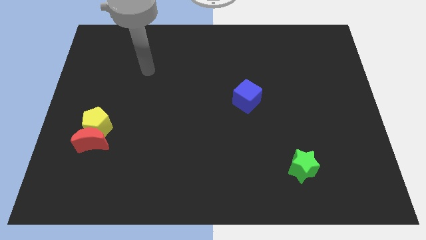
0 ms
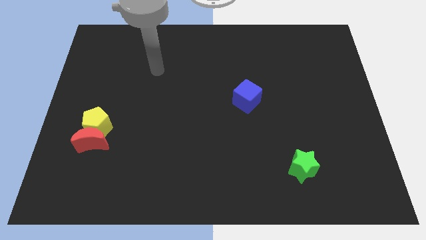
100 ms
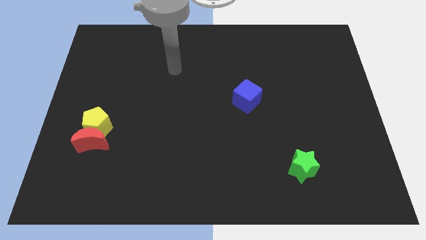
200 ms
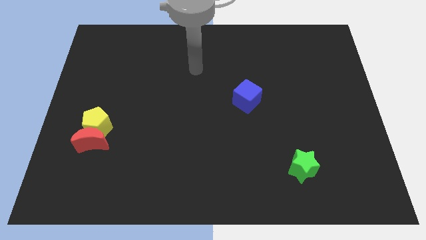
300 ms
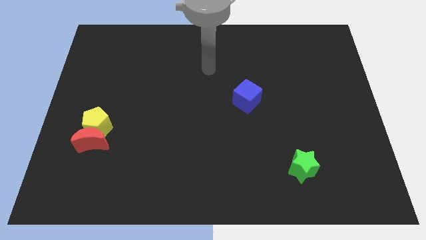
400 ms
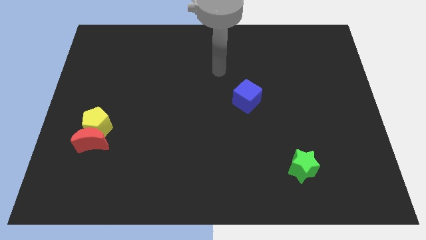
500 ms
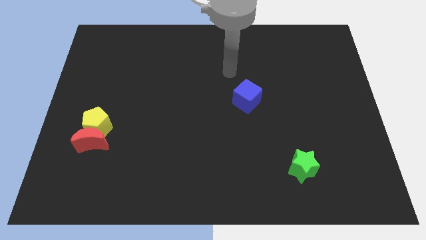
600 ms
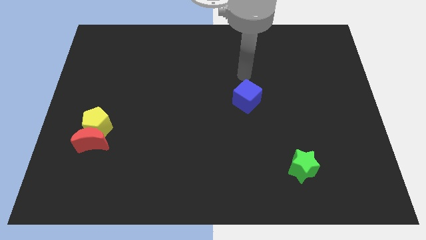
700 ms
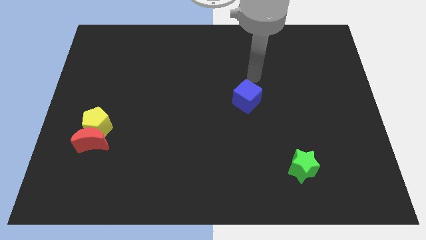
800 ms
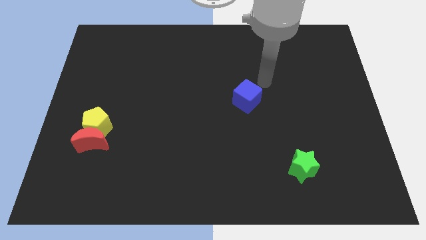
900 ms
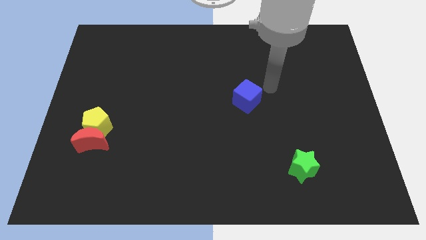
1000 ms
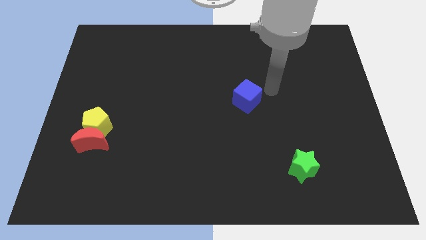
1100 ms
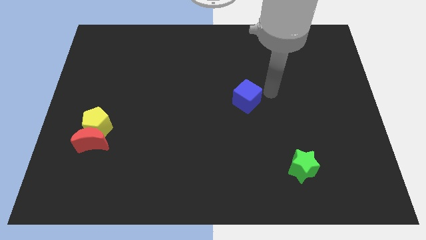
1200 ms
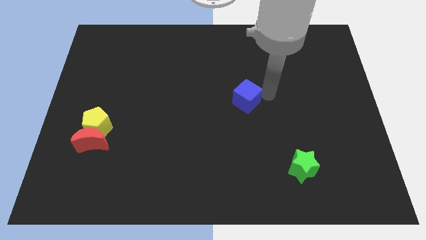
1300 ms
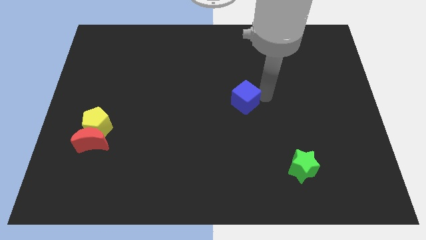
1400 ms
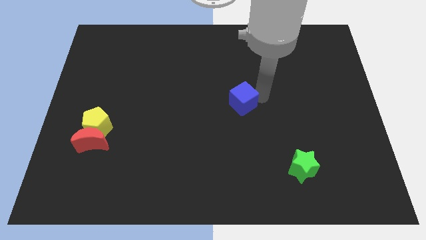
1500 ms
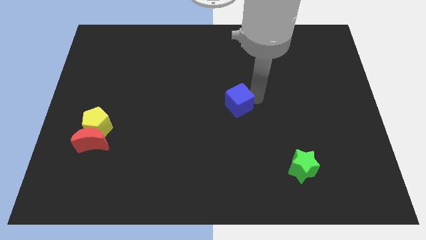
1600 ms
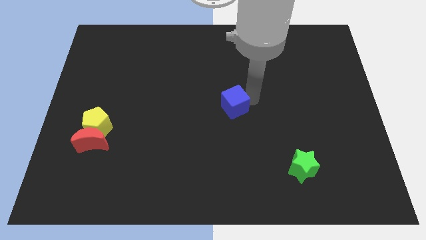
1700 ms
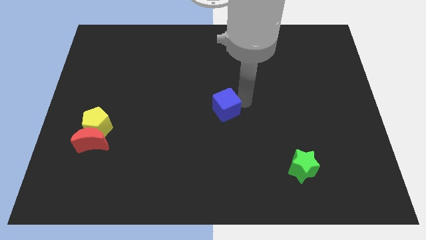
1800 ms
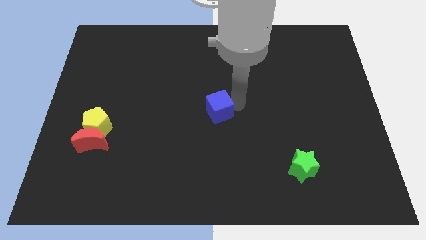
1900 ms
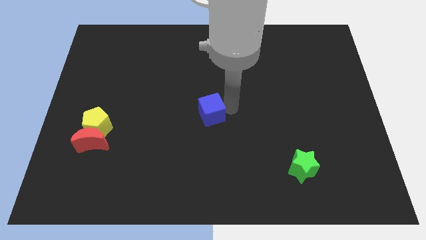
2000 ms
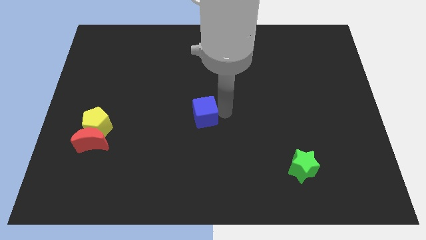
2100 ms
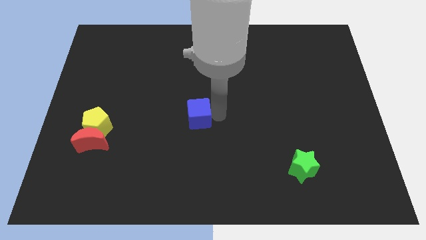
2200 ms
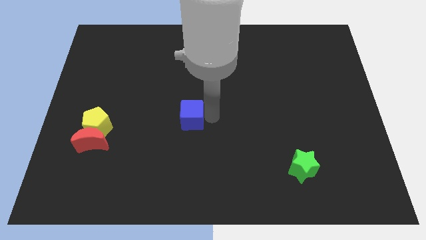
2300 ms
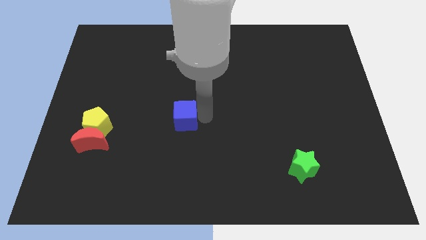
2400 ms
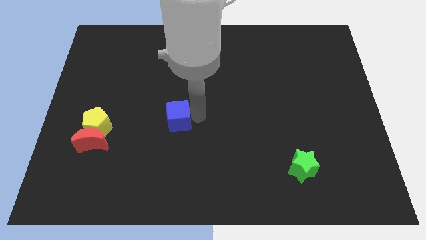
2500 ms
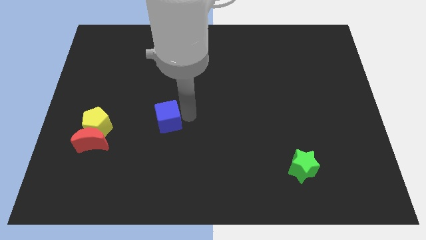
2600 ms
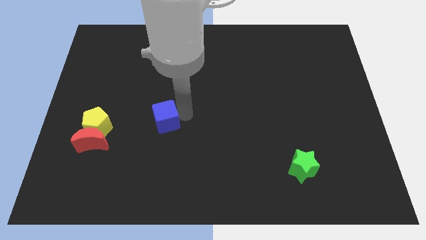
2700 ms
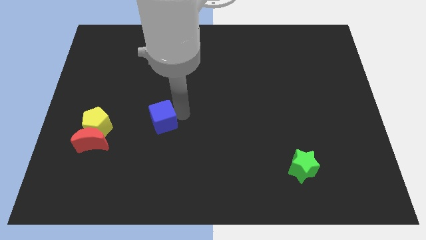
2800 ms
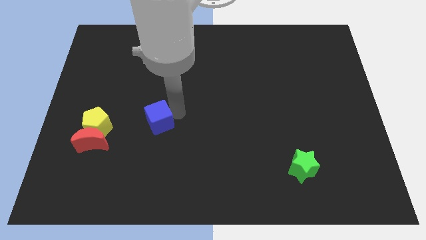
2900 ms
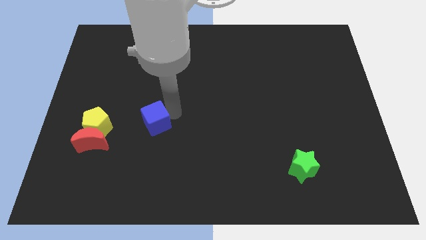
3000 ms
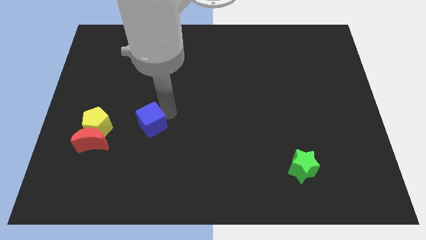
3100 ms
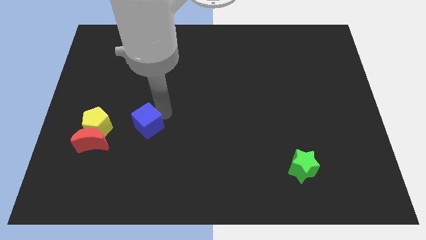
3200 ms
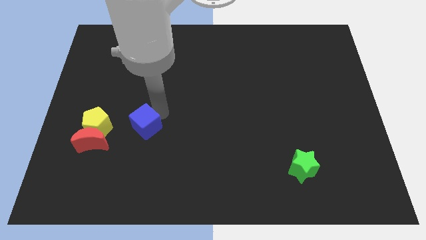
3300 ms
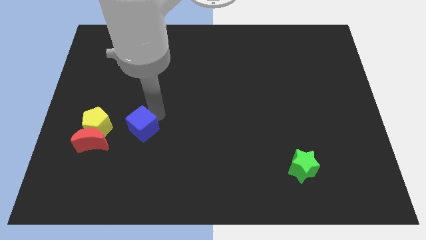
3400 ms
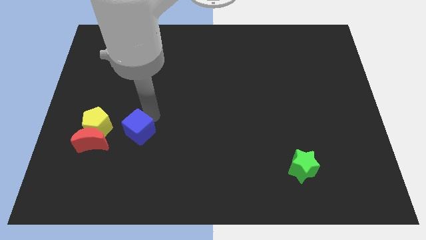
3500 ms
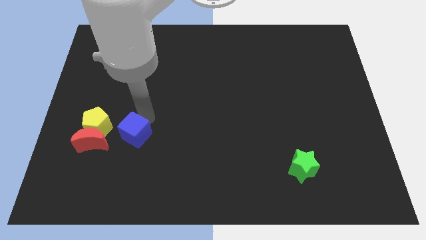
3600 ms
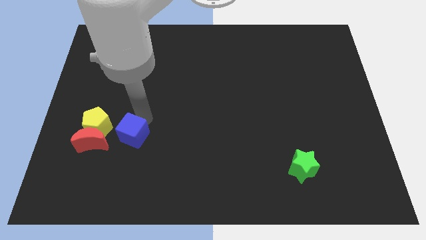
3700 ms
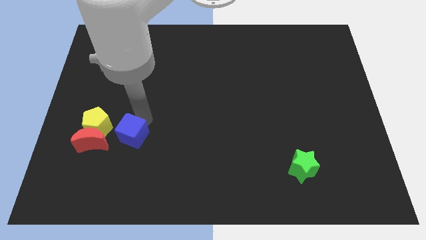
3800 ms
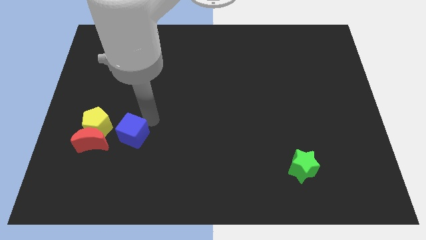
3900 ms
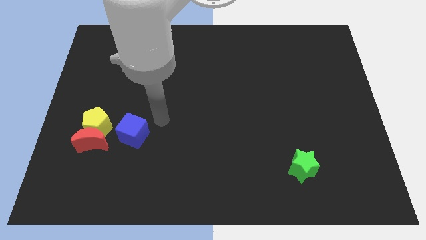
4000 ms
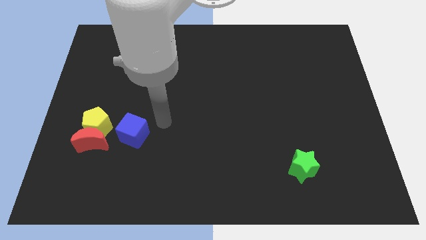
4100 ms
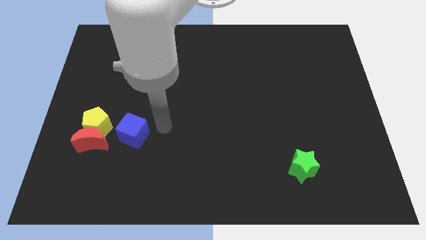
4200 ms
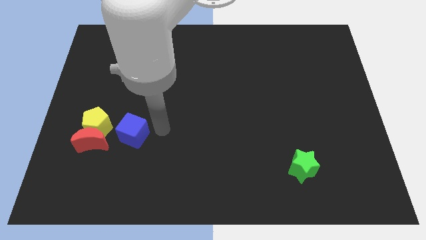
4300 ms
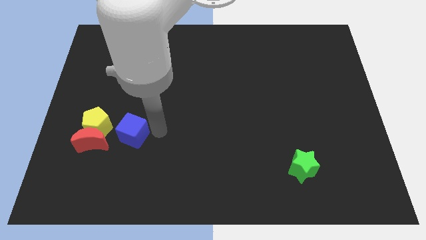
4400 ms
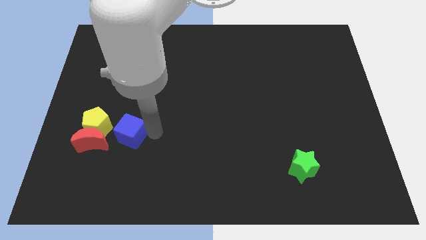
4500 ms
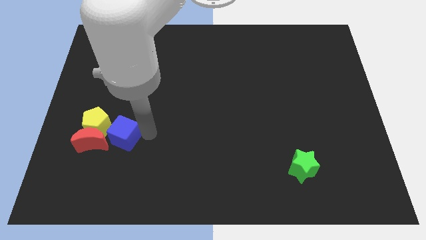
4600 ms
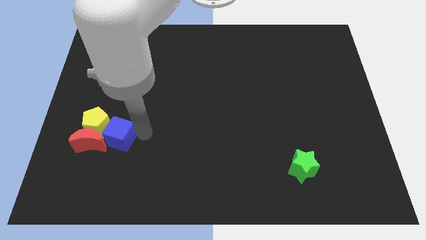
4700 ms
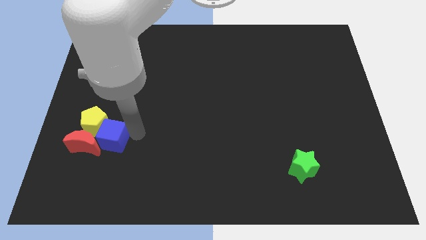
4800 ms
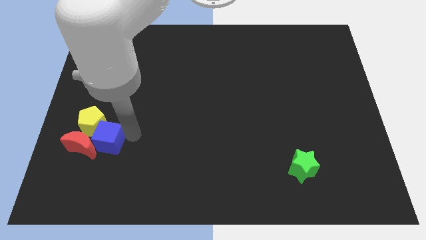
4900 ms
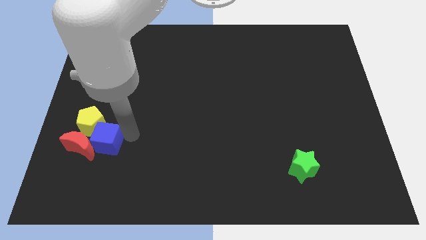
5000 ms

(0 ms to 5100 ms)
push the cube to the red block

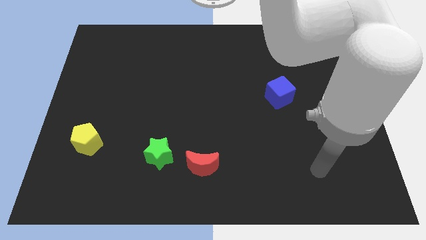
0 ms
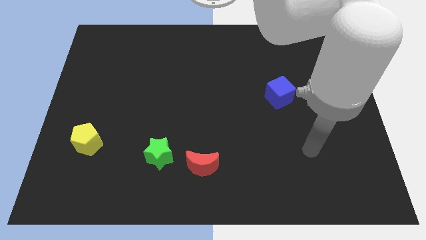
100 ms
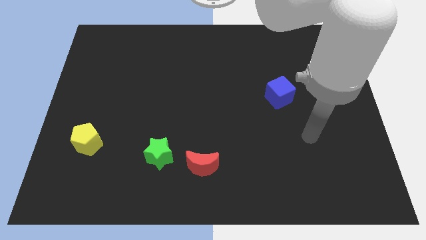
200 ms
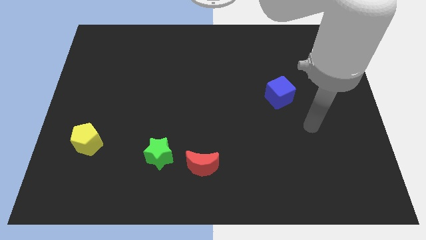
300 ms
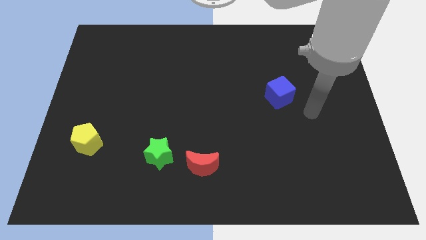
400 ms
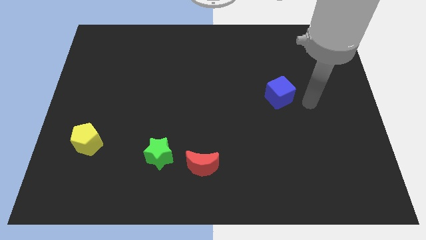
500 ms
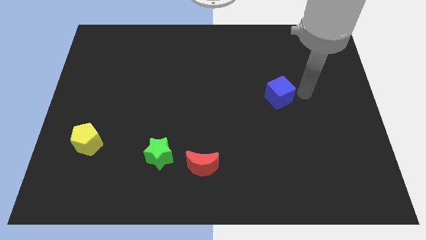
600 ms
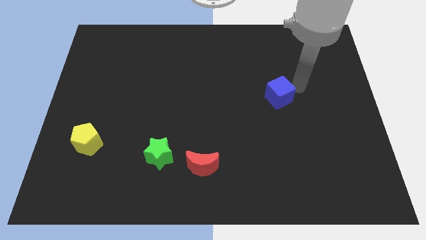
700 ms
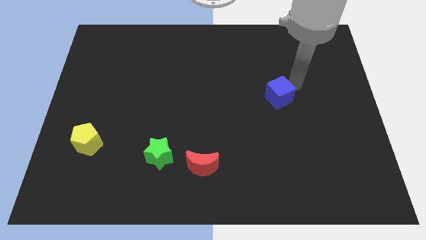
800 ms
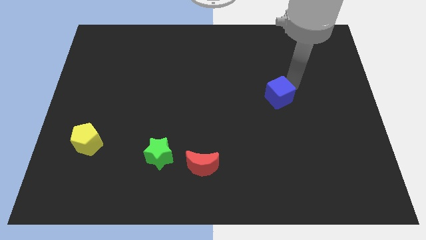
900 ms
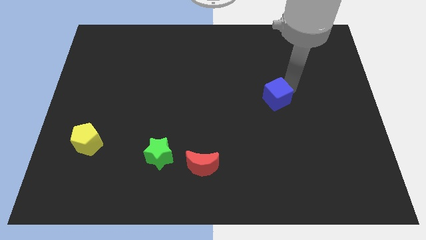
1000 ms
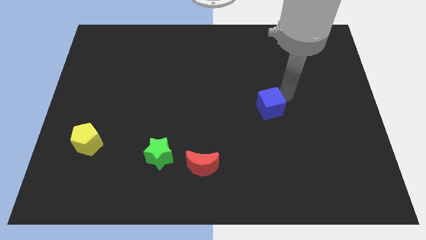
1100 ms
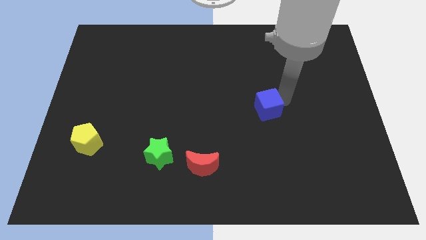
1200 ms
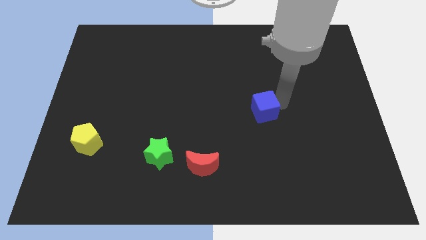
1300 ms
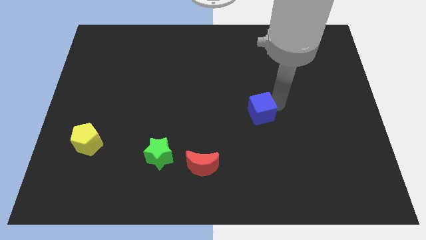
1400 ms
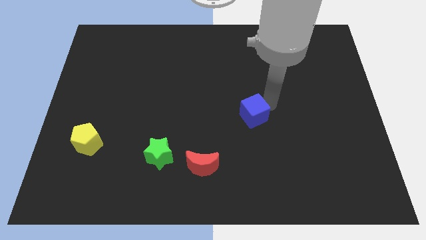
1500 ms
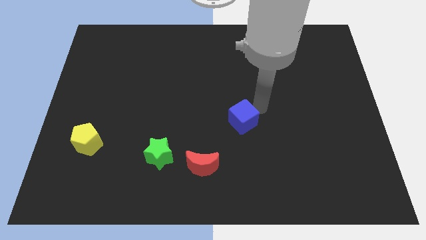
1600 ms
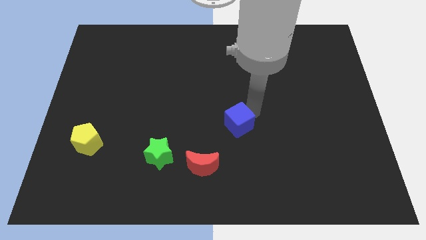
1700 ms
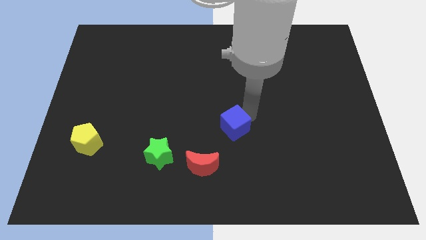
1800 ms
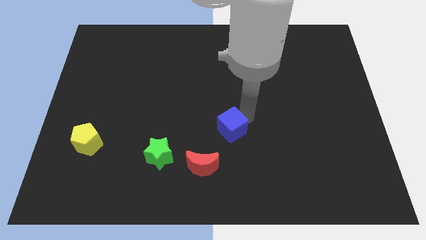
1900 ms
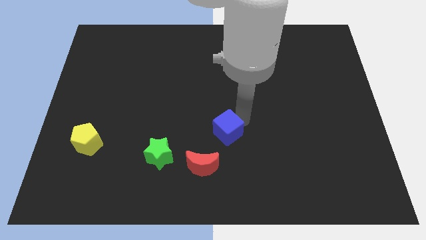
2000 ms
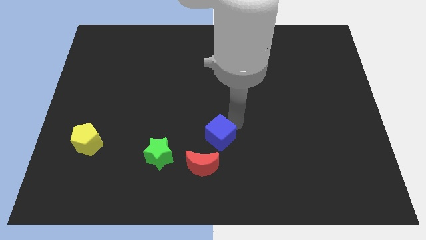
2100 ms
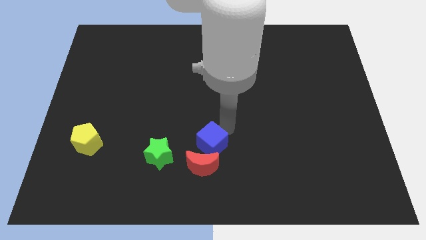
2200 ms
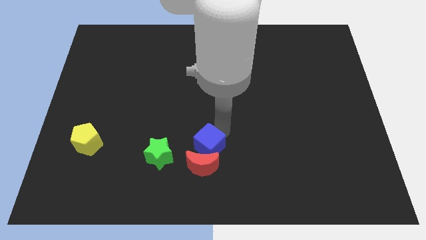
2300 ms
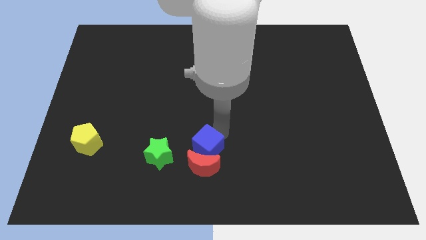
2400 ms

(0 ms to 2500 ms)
move the cube towards the red moon

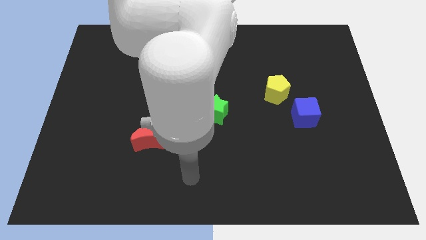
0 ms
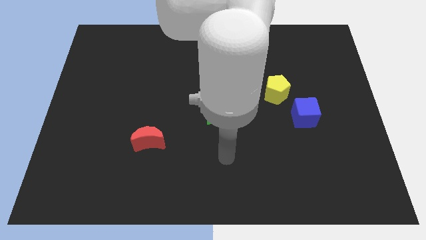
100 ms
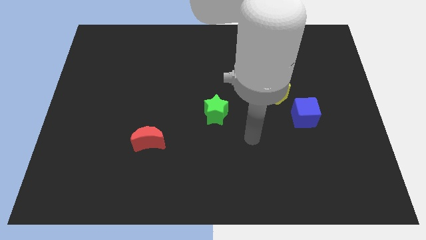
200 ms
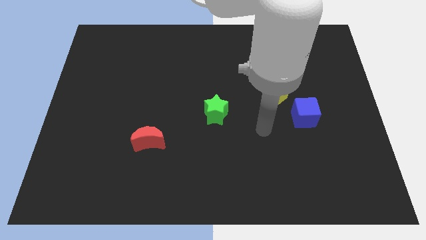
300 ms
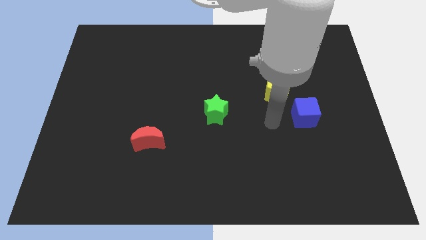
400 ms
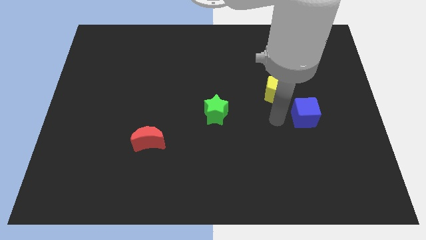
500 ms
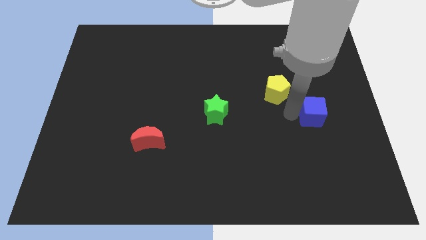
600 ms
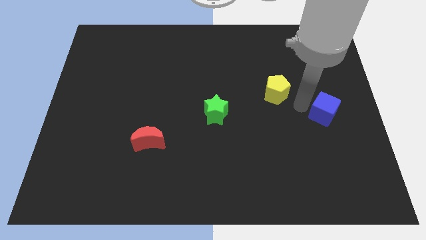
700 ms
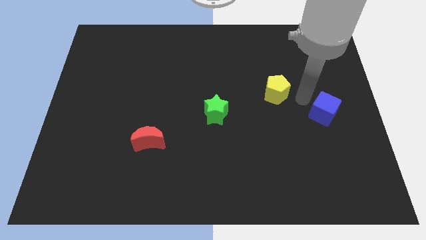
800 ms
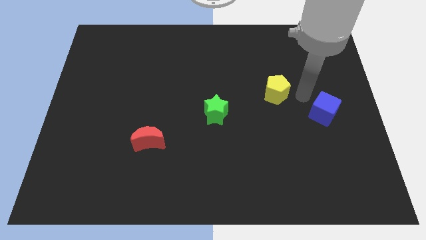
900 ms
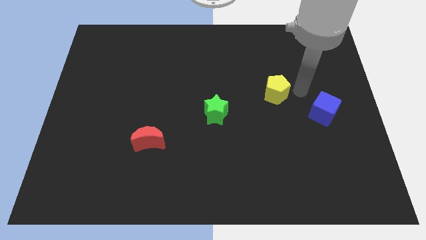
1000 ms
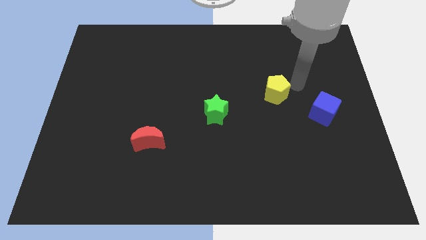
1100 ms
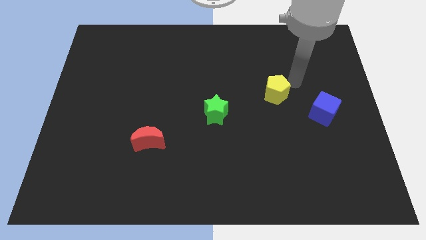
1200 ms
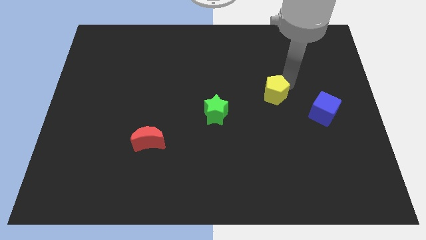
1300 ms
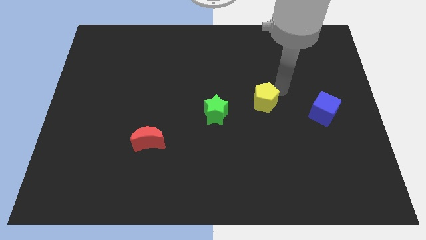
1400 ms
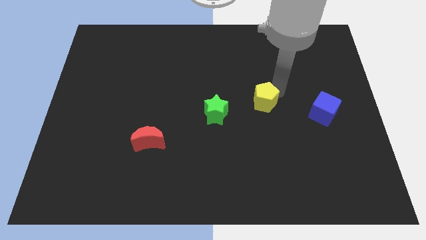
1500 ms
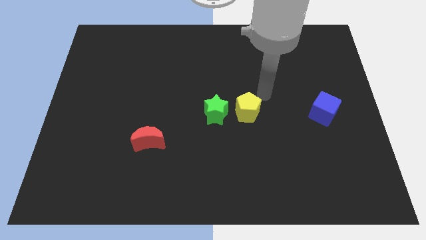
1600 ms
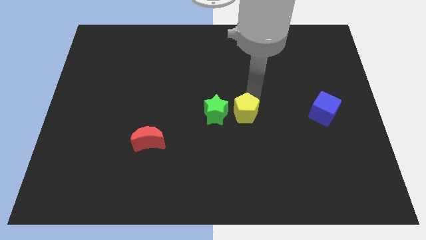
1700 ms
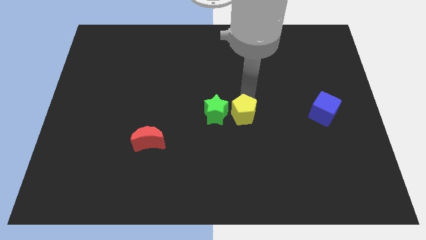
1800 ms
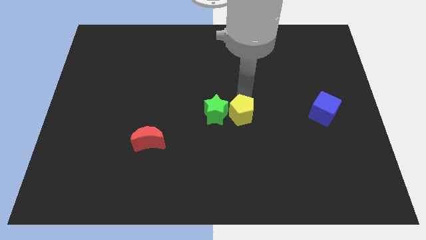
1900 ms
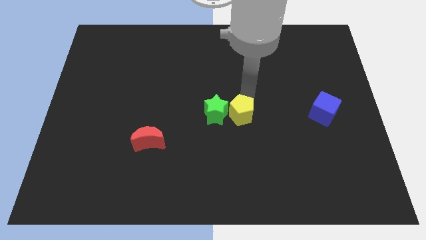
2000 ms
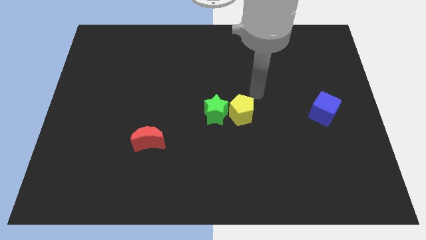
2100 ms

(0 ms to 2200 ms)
move the yellow block close to the green block
